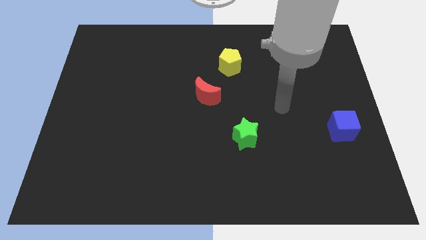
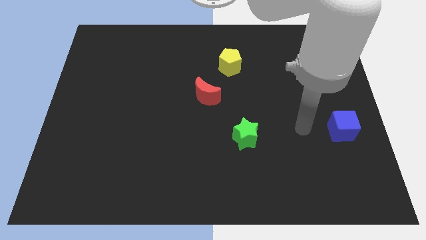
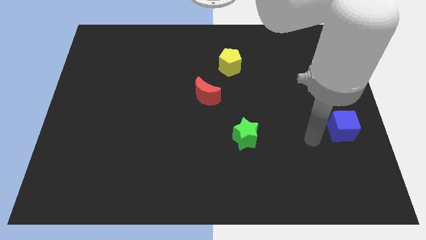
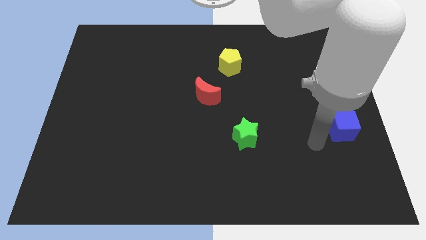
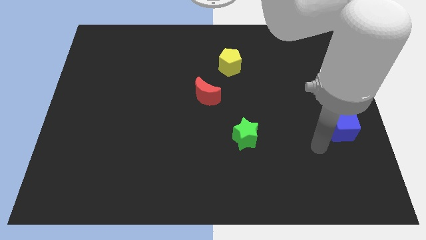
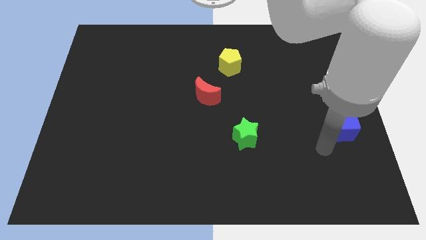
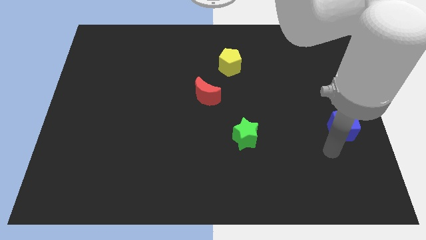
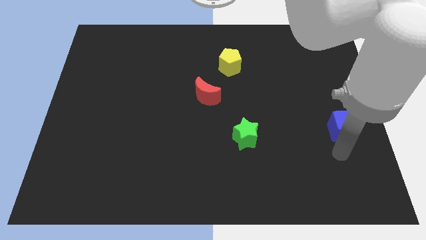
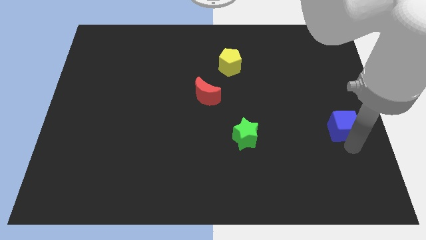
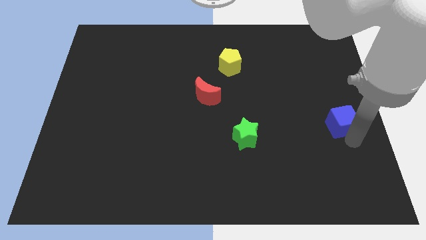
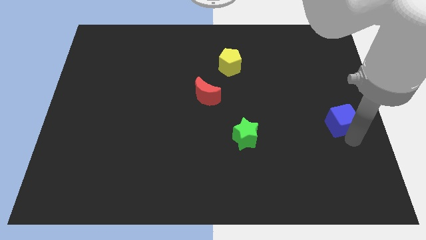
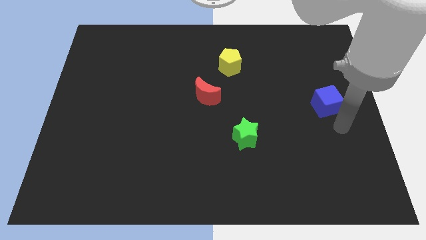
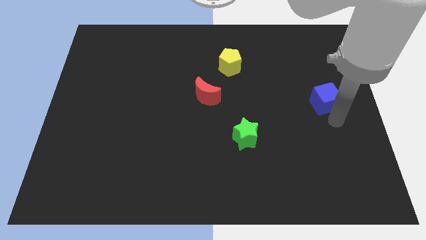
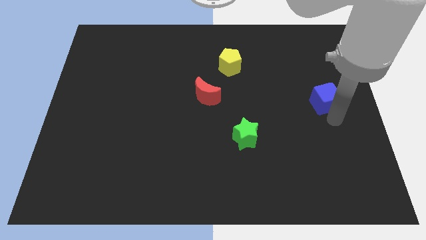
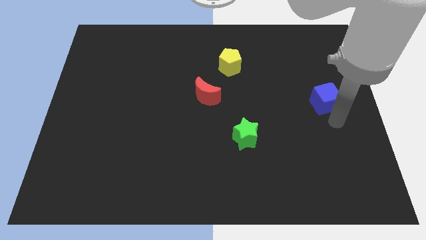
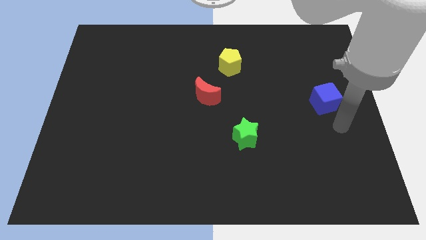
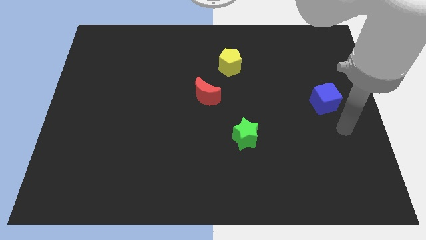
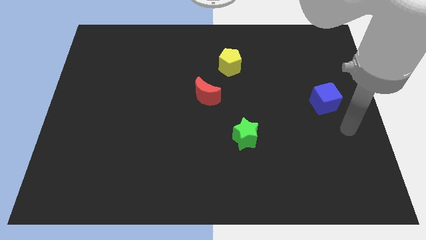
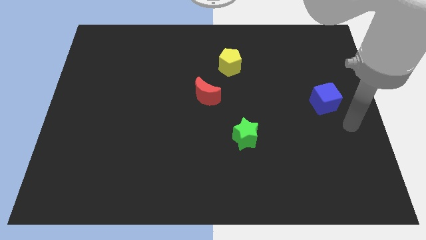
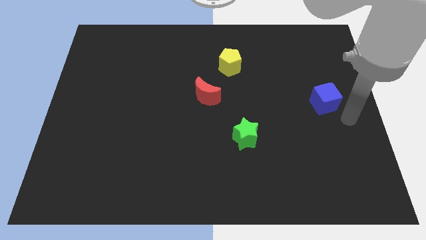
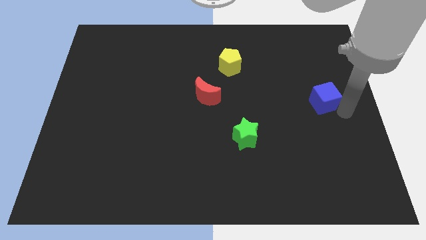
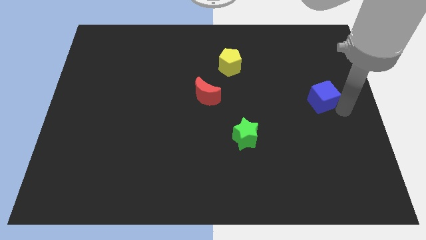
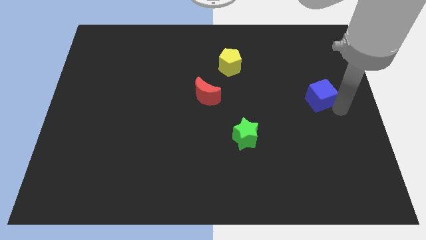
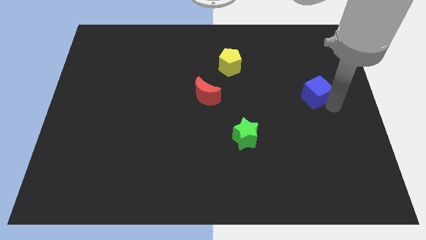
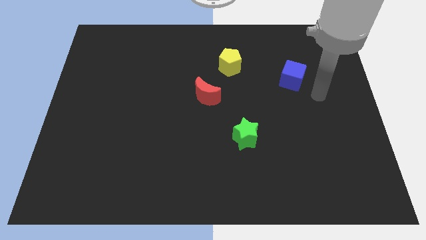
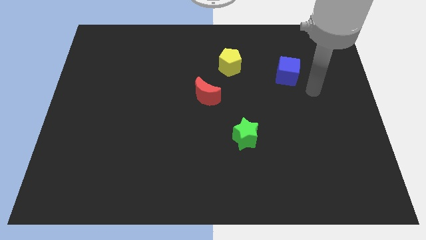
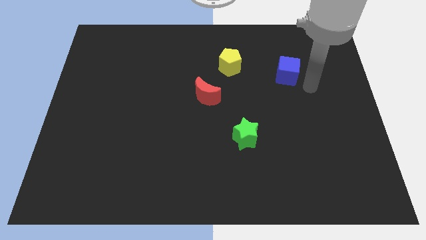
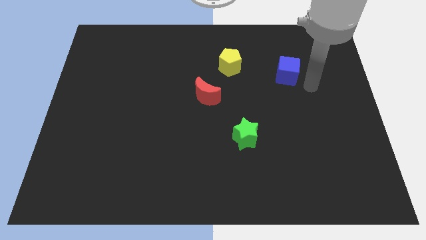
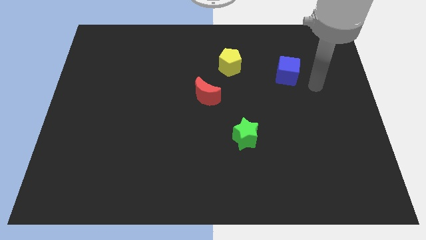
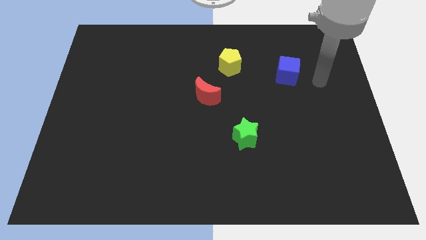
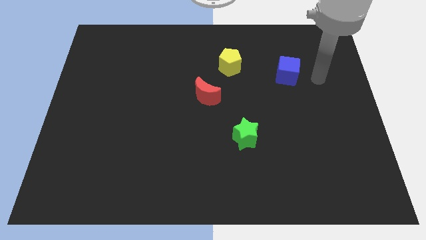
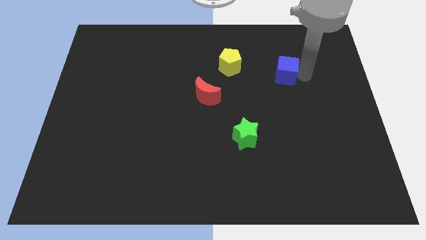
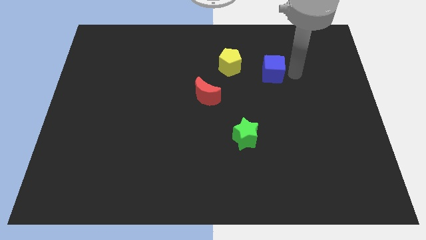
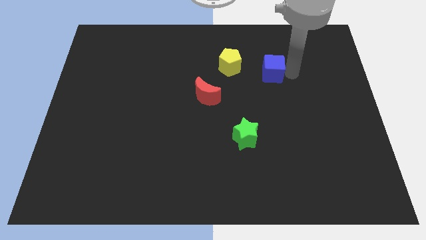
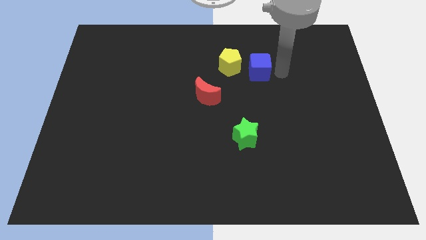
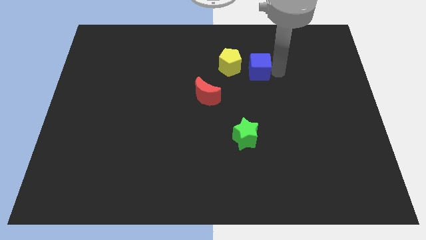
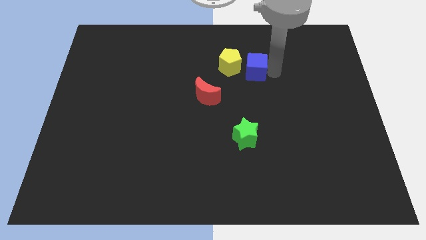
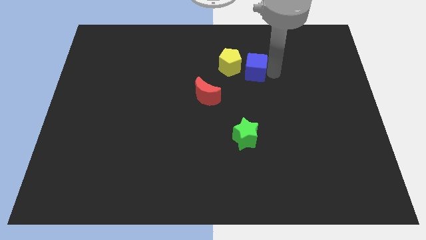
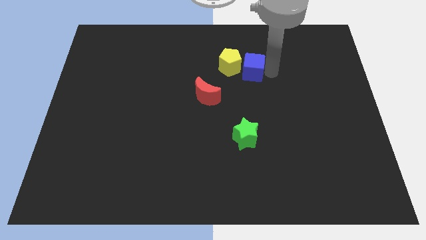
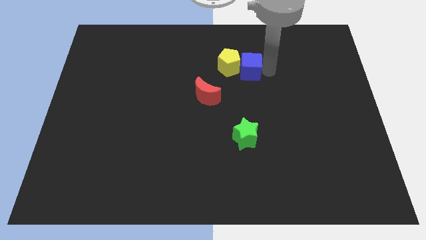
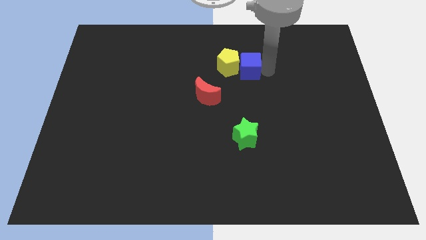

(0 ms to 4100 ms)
move the blue cube next to the yellow pentagon

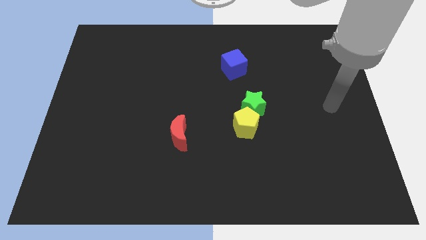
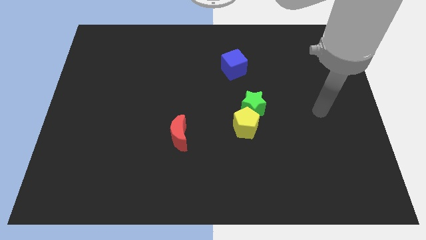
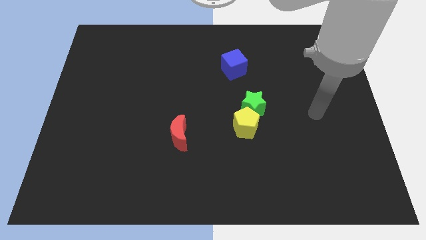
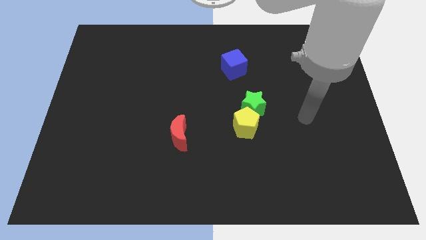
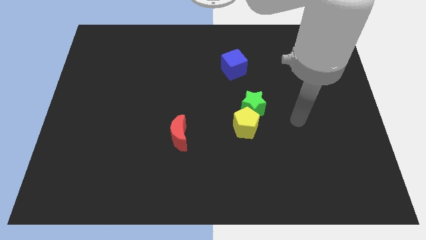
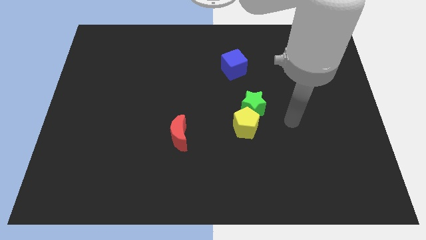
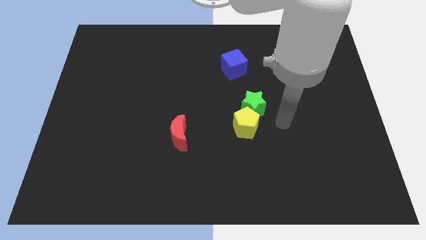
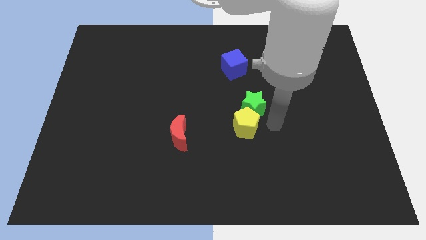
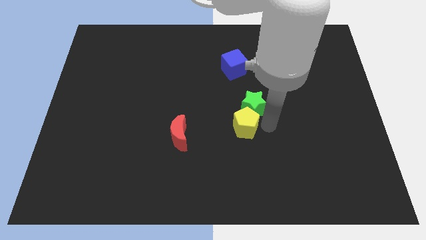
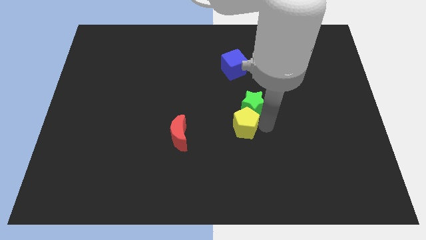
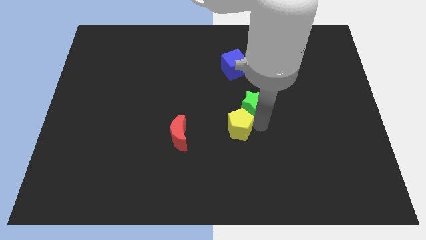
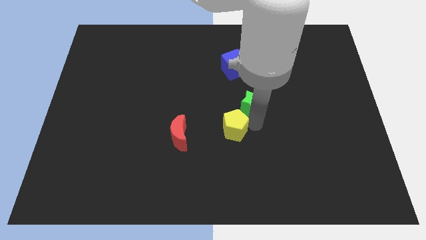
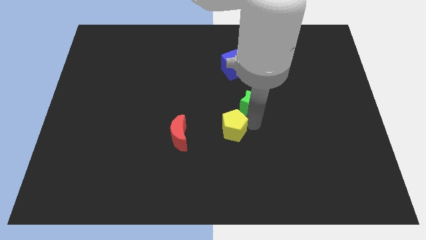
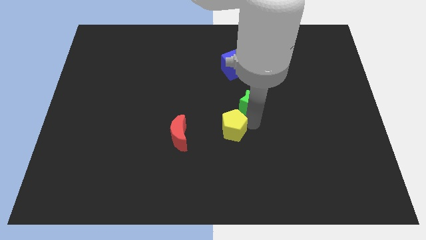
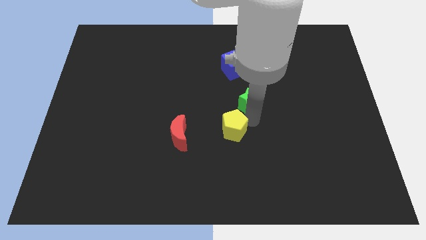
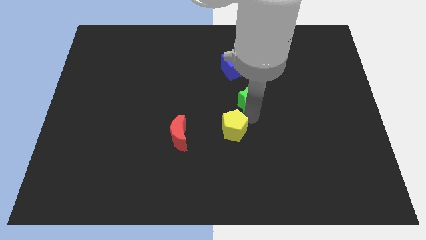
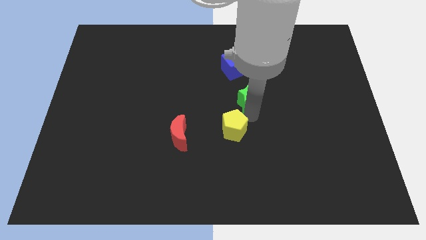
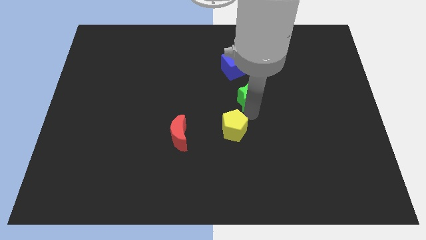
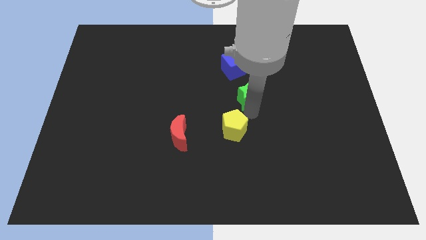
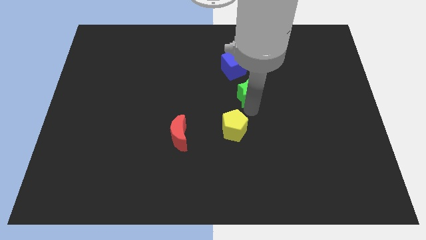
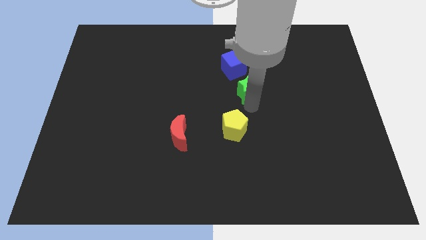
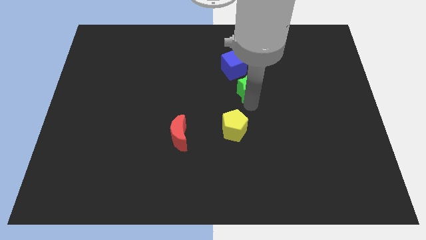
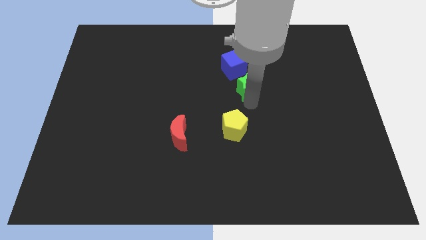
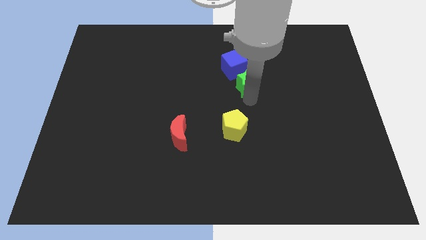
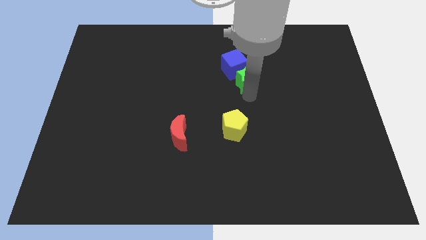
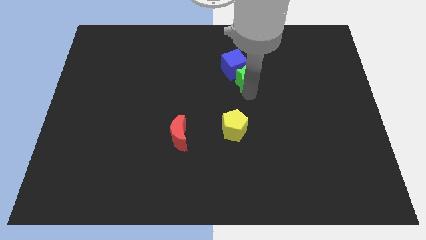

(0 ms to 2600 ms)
slide the green star close to the blue cube

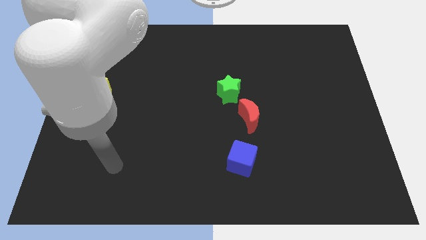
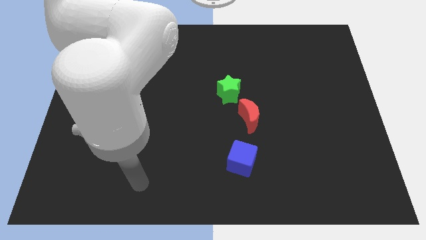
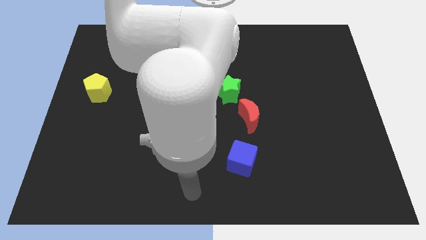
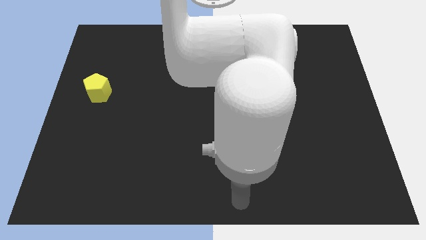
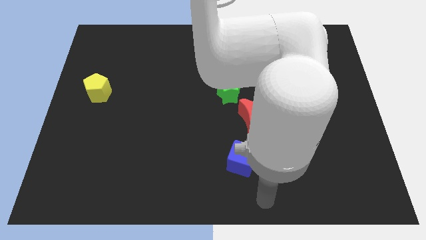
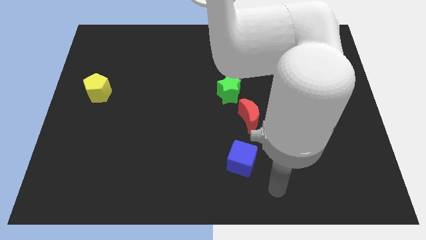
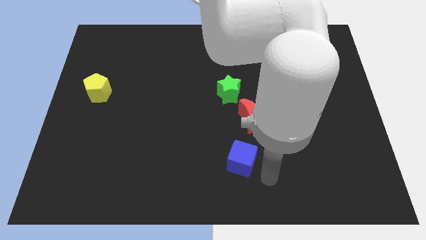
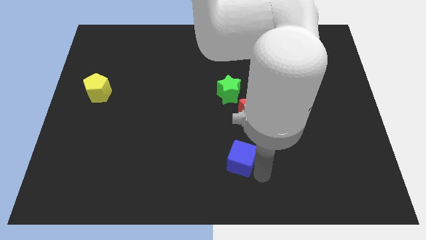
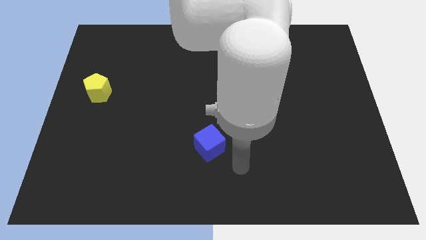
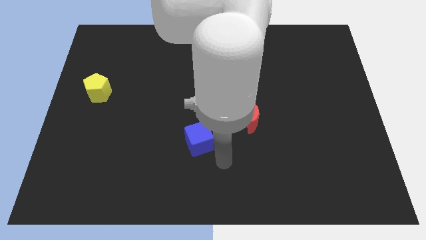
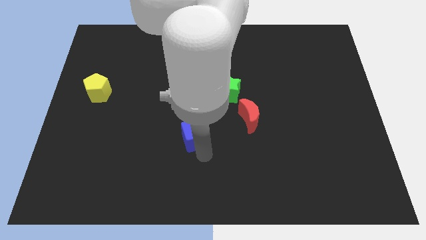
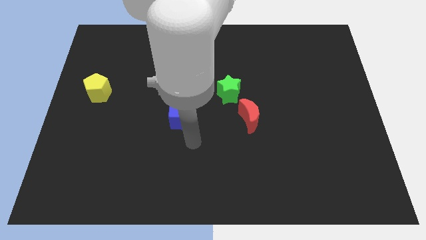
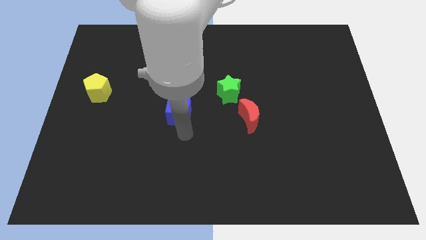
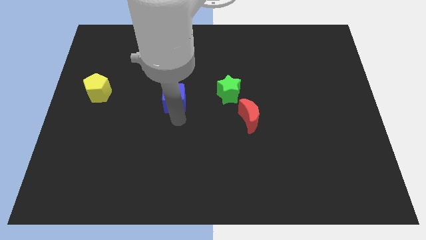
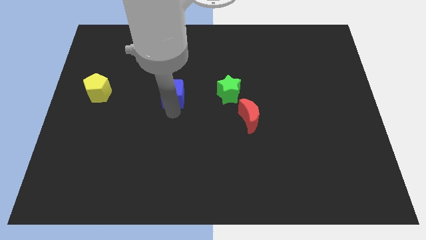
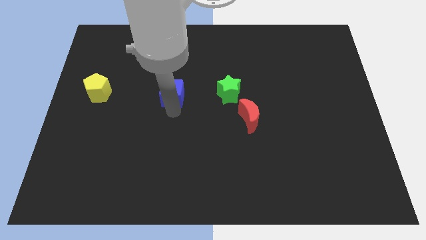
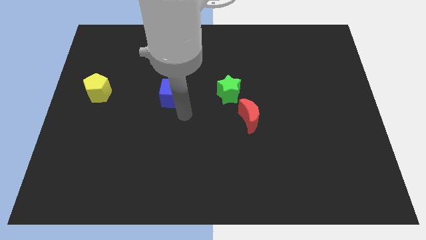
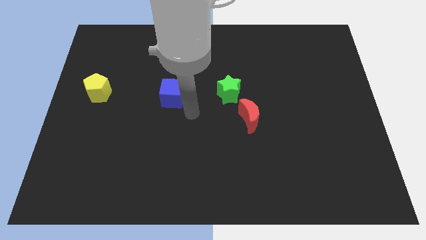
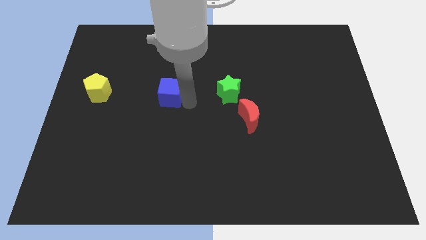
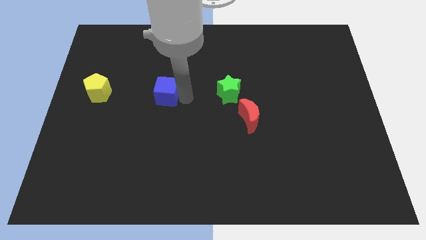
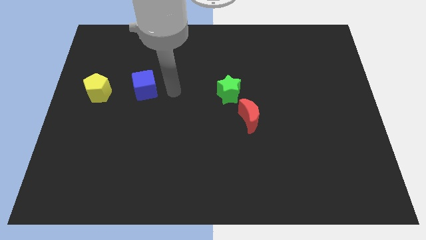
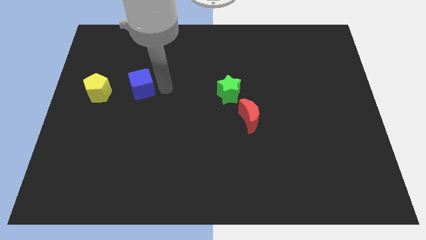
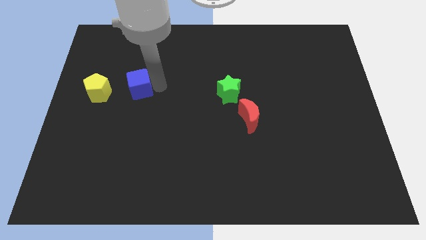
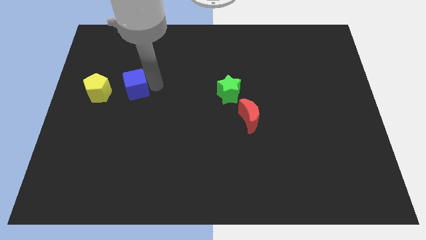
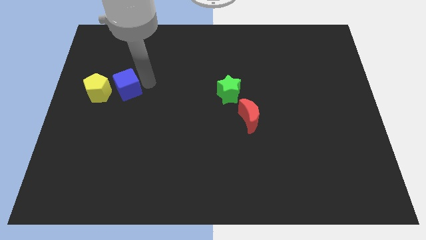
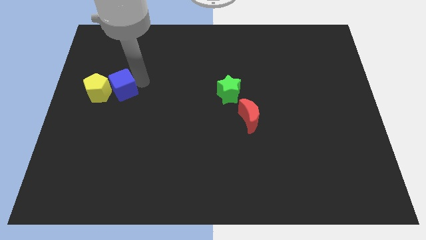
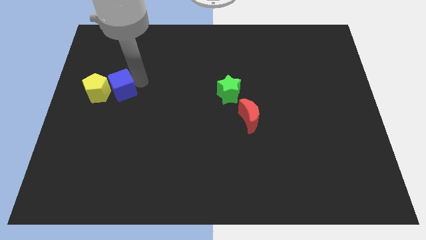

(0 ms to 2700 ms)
move the blue block towards the yellow block
